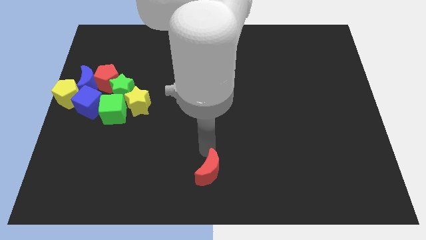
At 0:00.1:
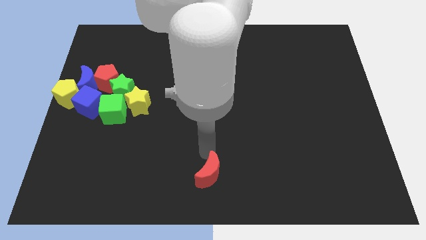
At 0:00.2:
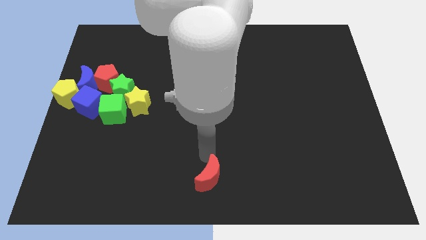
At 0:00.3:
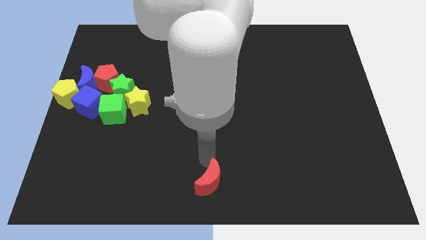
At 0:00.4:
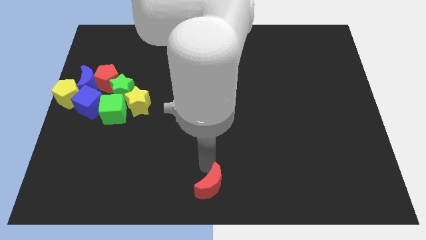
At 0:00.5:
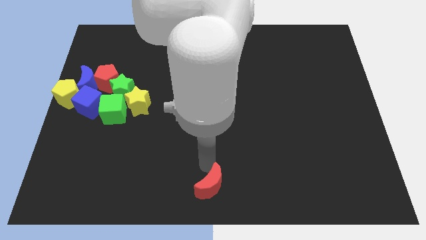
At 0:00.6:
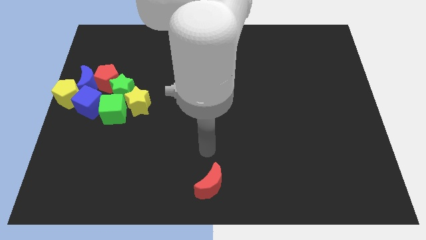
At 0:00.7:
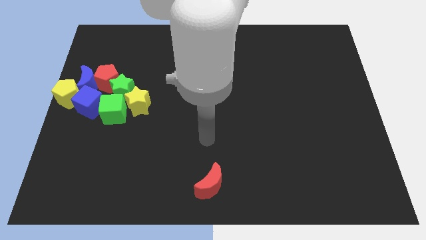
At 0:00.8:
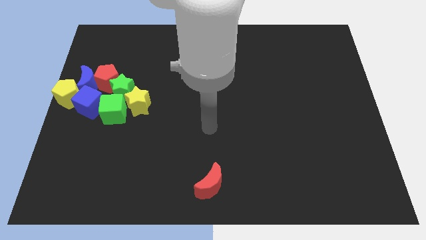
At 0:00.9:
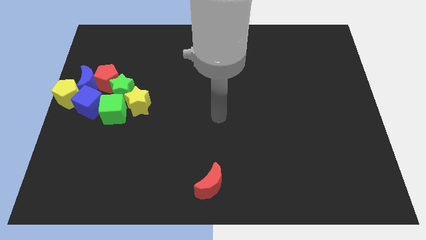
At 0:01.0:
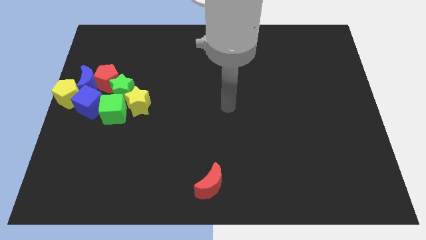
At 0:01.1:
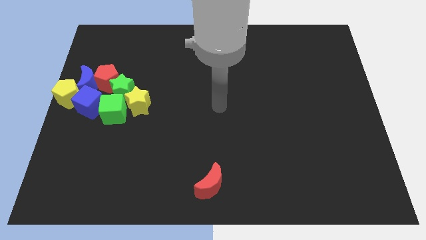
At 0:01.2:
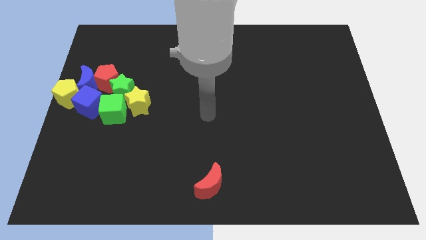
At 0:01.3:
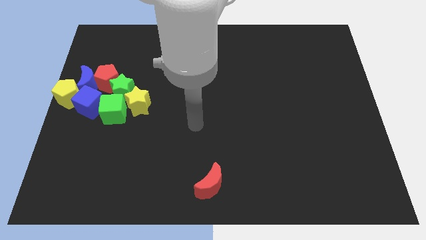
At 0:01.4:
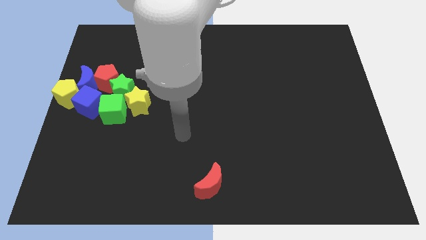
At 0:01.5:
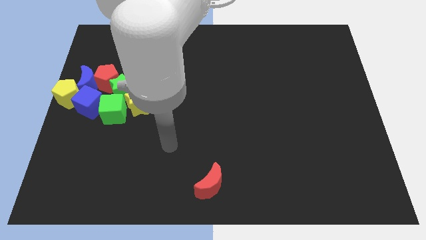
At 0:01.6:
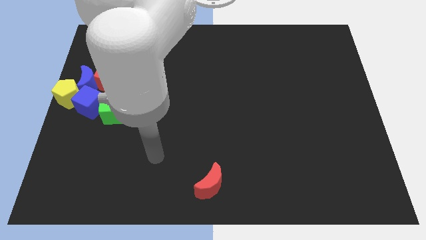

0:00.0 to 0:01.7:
place the red crescent towards the bottom center

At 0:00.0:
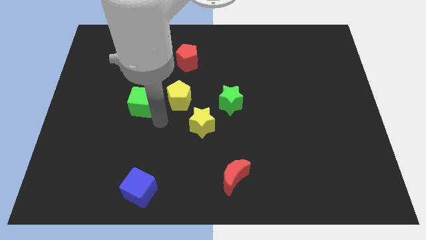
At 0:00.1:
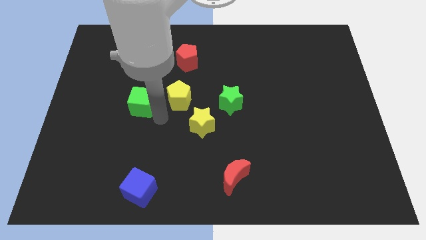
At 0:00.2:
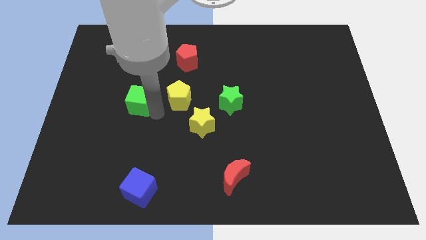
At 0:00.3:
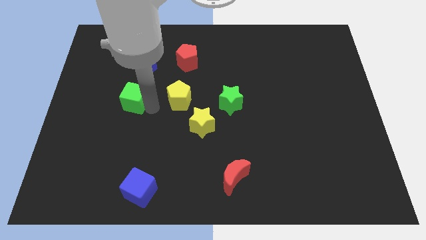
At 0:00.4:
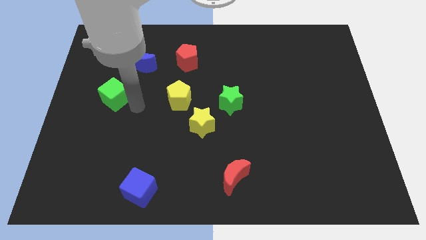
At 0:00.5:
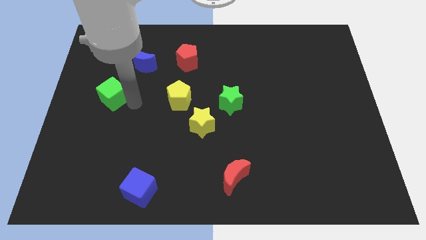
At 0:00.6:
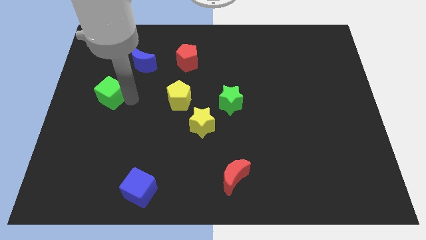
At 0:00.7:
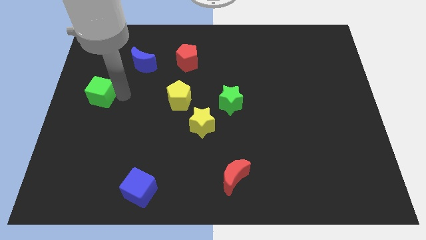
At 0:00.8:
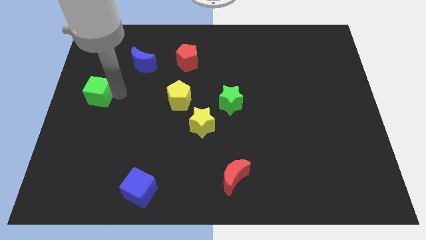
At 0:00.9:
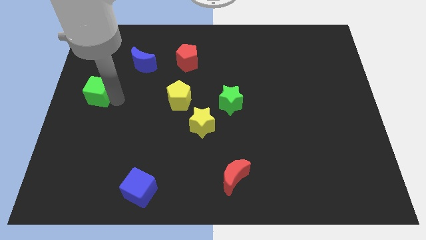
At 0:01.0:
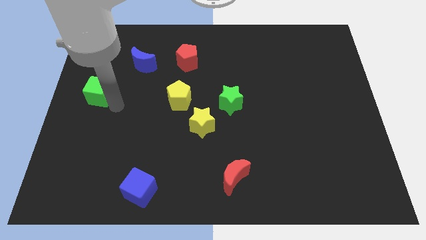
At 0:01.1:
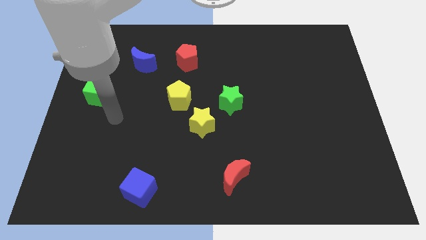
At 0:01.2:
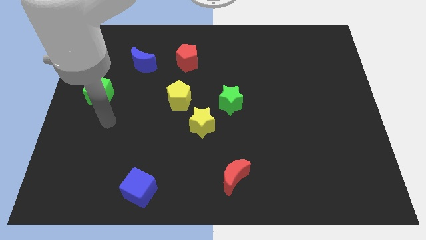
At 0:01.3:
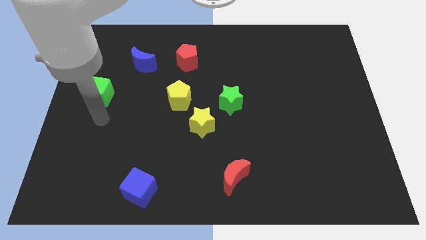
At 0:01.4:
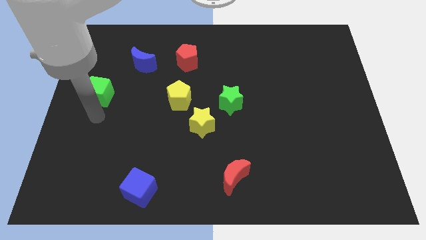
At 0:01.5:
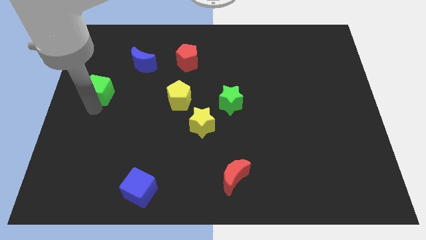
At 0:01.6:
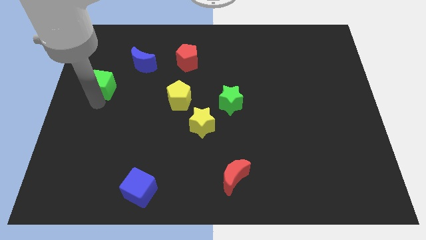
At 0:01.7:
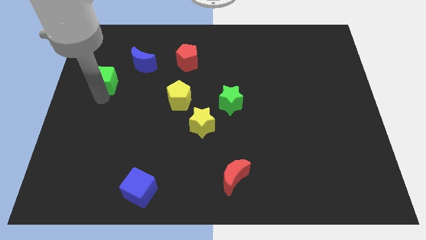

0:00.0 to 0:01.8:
push the green cube towards the top side of the board

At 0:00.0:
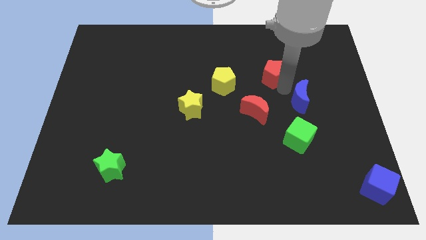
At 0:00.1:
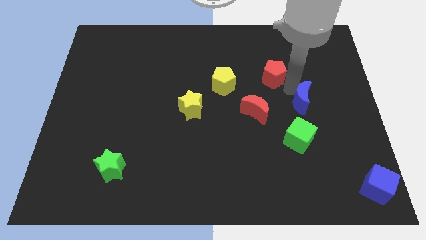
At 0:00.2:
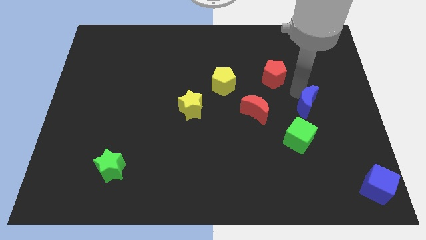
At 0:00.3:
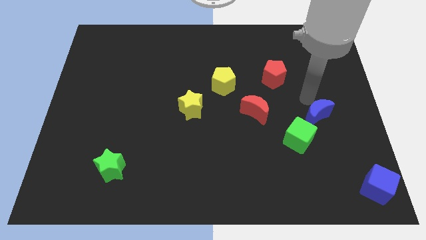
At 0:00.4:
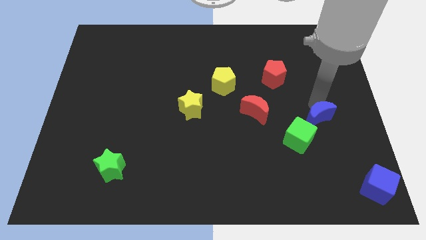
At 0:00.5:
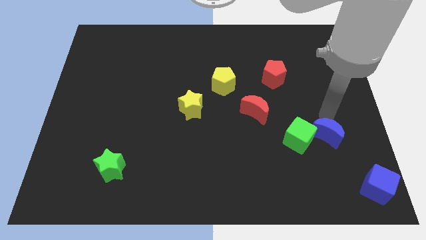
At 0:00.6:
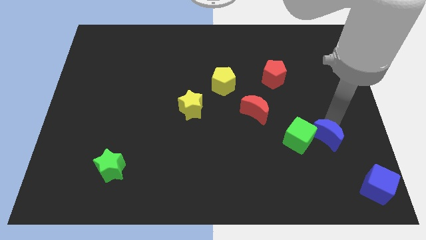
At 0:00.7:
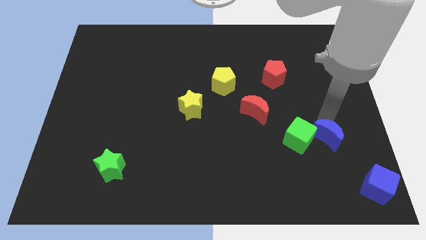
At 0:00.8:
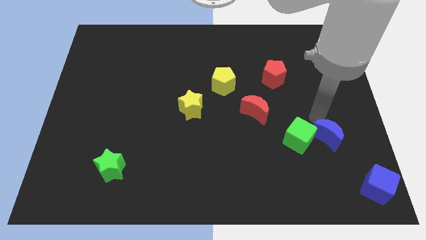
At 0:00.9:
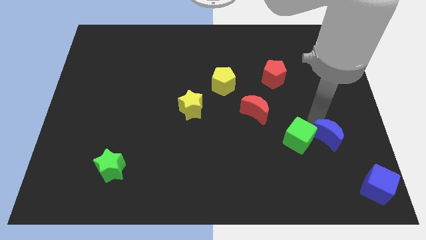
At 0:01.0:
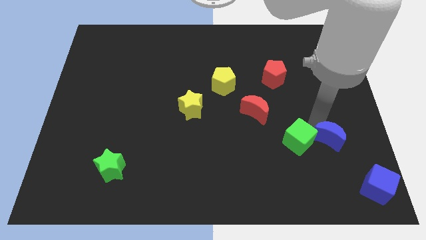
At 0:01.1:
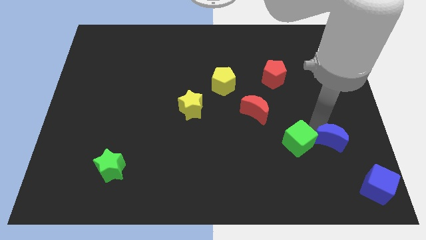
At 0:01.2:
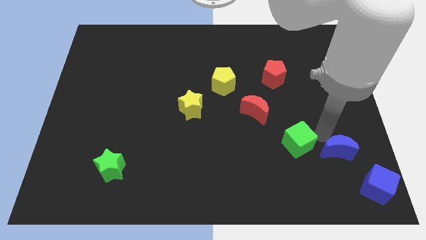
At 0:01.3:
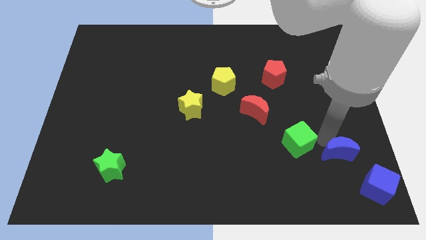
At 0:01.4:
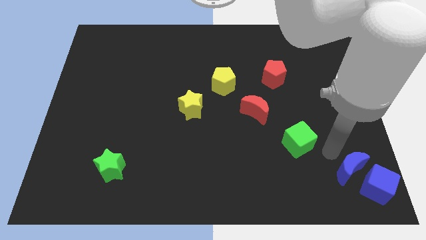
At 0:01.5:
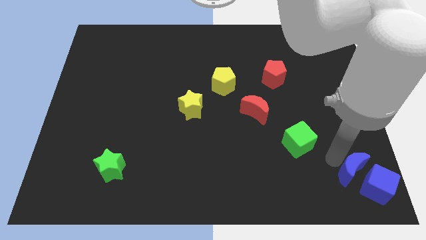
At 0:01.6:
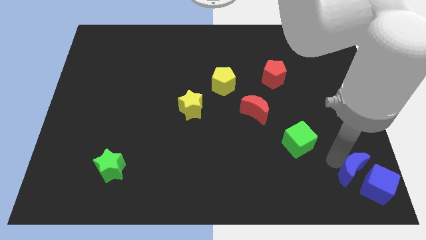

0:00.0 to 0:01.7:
place the blue moon in between the cubes

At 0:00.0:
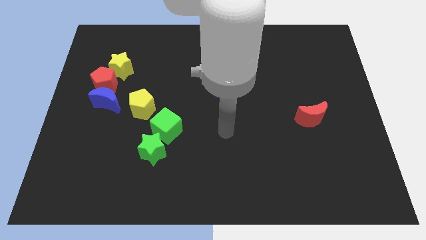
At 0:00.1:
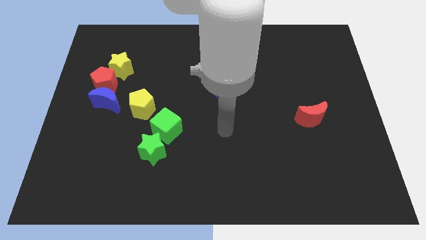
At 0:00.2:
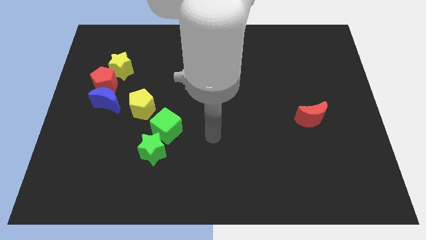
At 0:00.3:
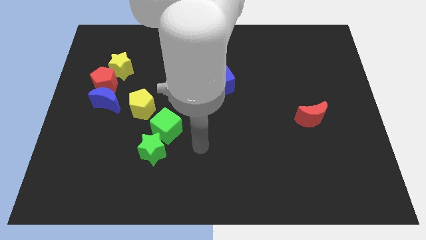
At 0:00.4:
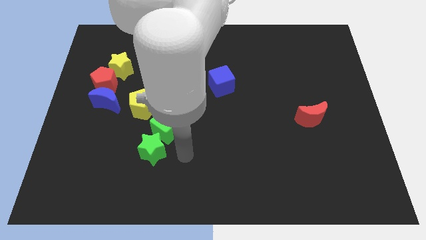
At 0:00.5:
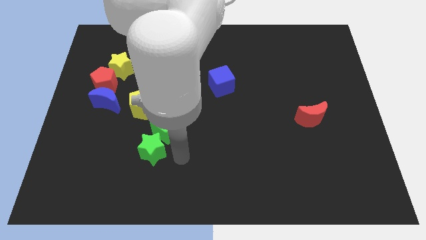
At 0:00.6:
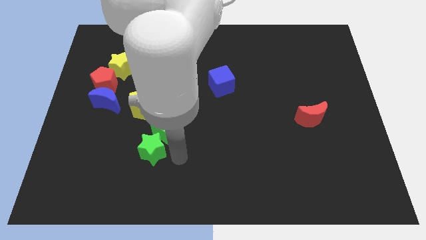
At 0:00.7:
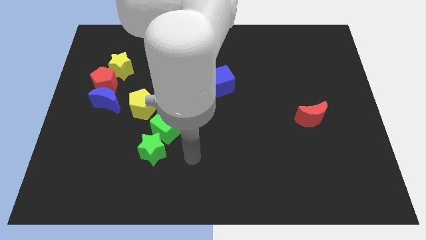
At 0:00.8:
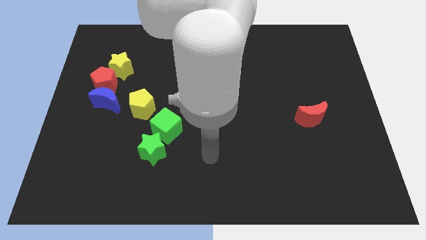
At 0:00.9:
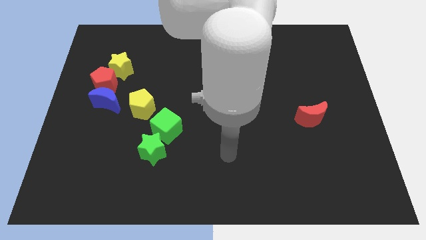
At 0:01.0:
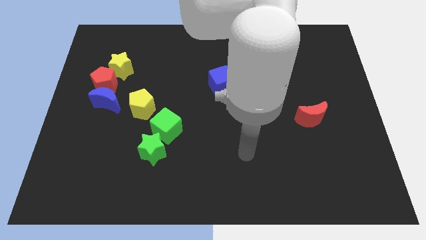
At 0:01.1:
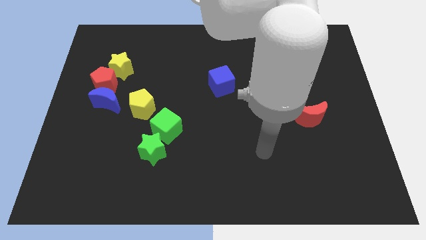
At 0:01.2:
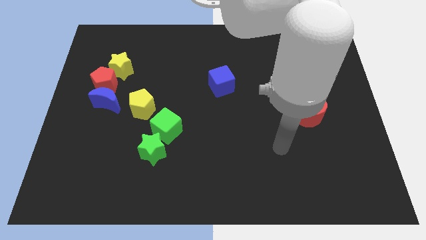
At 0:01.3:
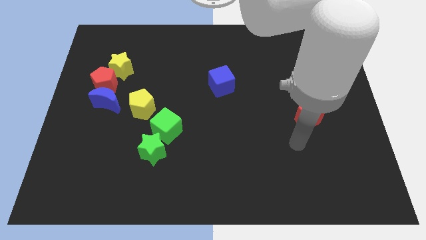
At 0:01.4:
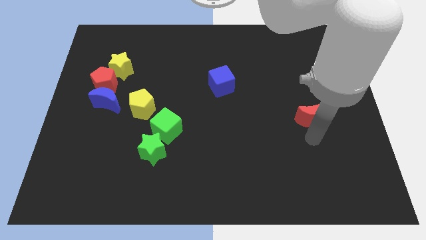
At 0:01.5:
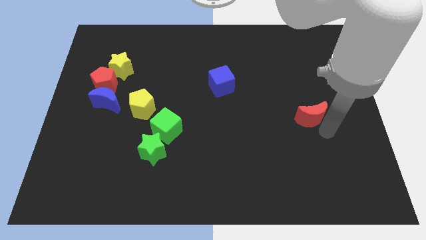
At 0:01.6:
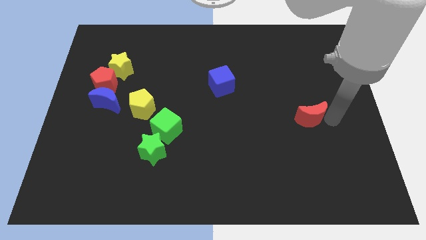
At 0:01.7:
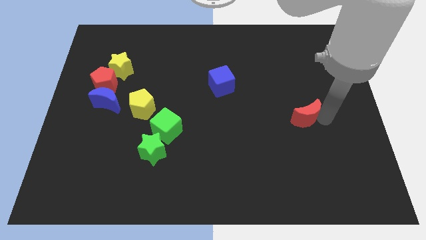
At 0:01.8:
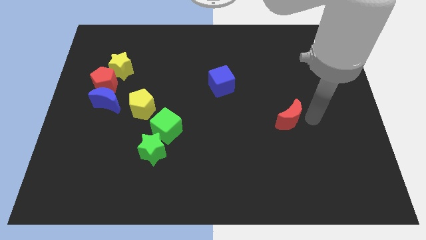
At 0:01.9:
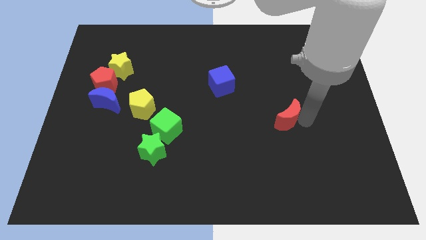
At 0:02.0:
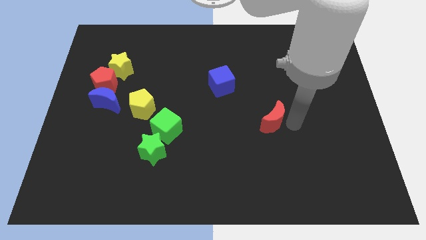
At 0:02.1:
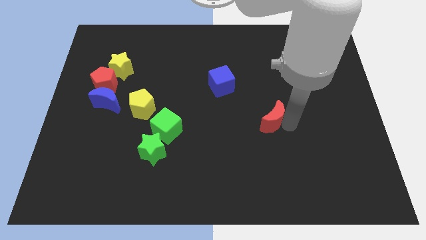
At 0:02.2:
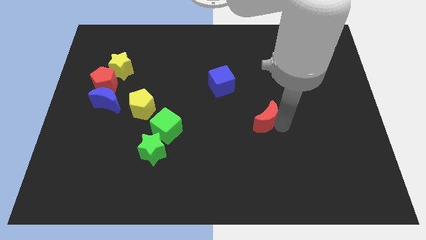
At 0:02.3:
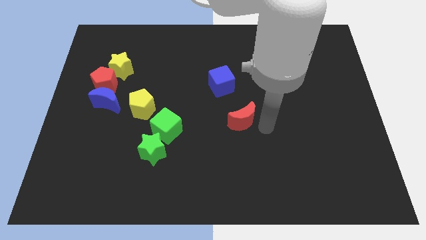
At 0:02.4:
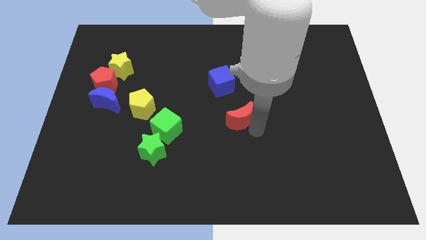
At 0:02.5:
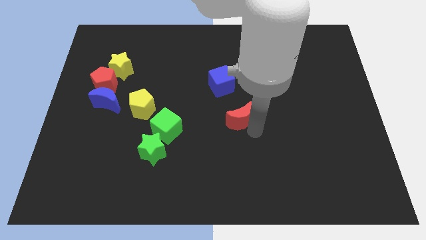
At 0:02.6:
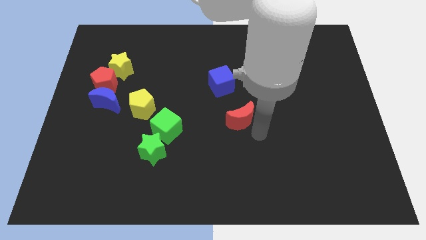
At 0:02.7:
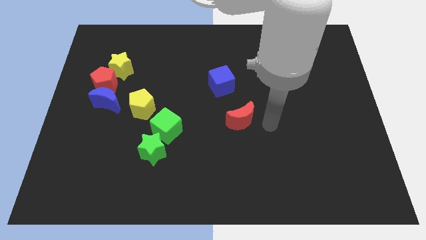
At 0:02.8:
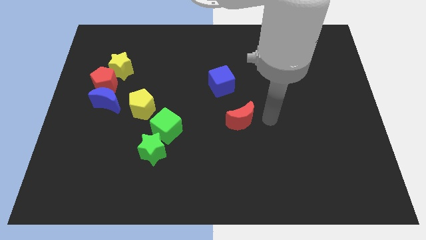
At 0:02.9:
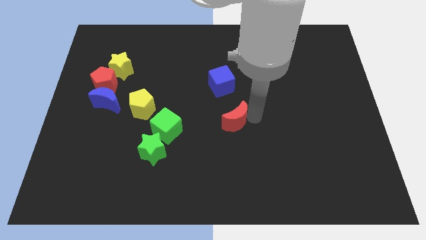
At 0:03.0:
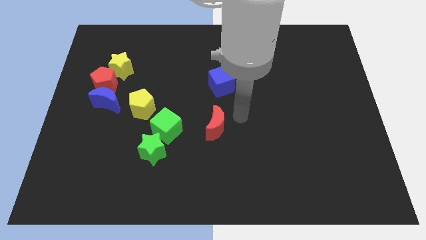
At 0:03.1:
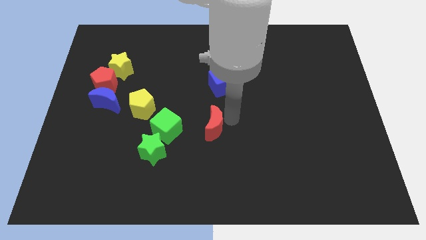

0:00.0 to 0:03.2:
place red moon vertical to blue cube

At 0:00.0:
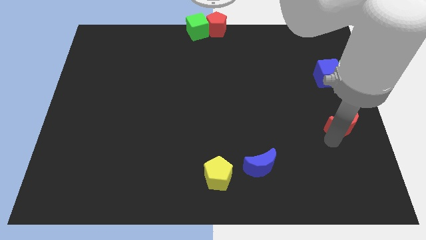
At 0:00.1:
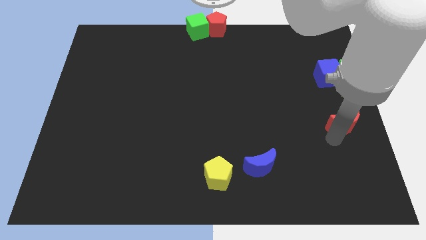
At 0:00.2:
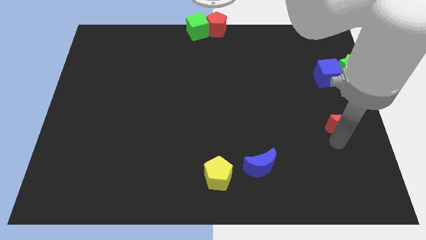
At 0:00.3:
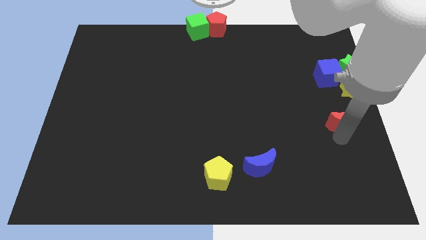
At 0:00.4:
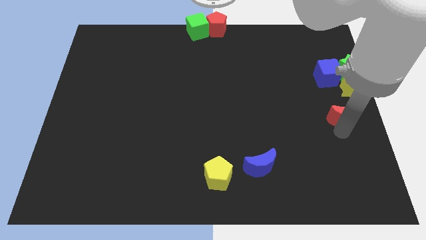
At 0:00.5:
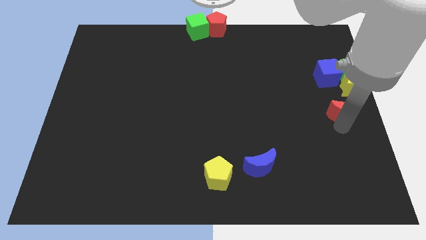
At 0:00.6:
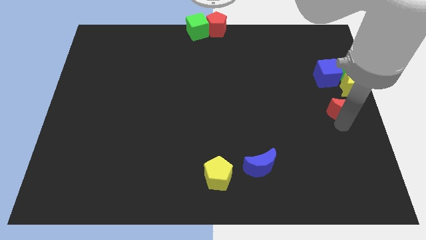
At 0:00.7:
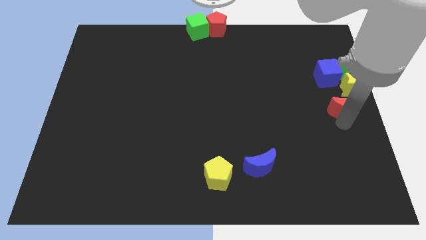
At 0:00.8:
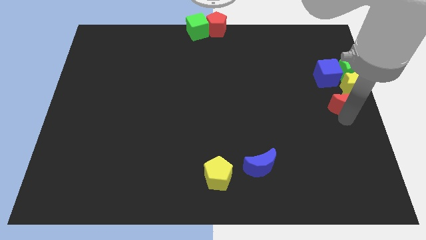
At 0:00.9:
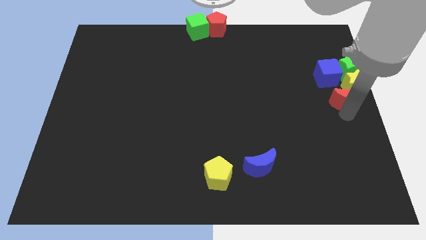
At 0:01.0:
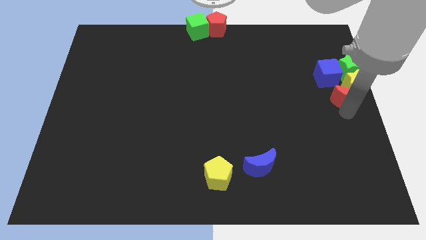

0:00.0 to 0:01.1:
push the red crescent to the bottom of the yellow star
